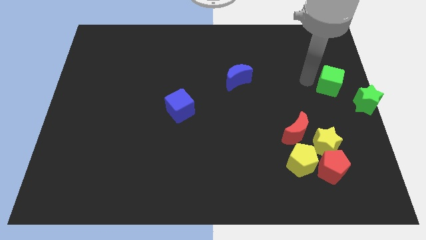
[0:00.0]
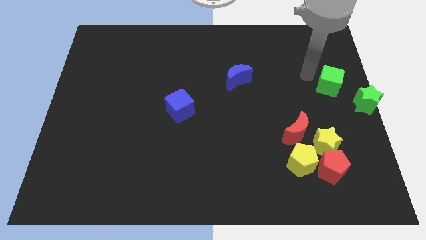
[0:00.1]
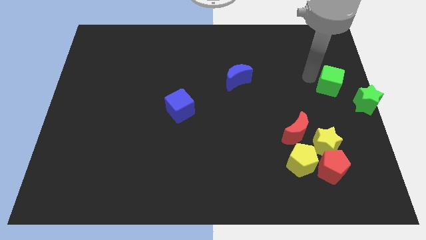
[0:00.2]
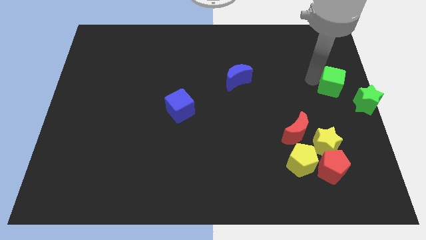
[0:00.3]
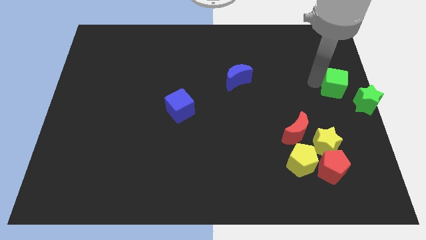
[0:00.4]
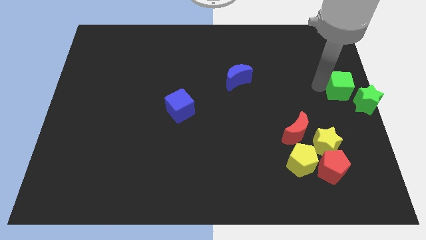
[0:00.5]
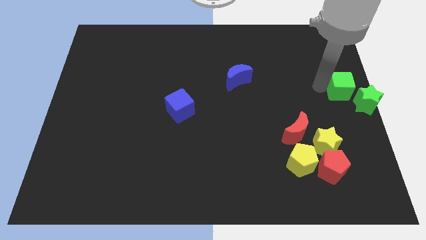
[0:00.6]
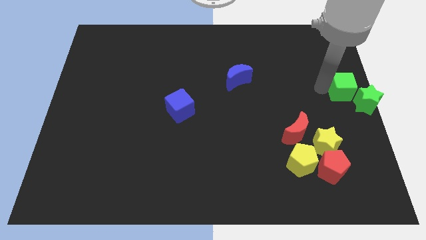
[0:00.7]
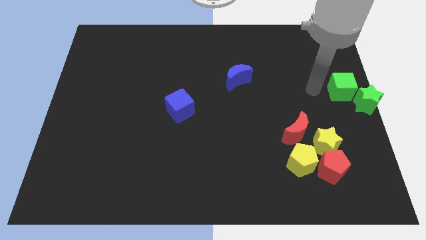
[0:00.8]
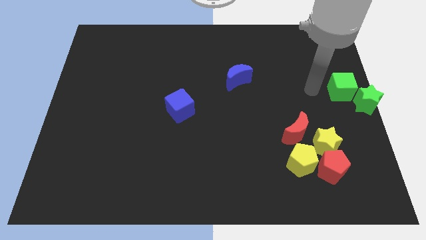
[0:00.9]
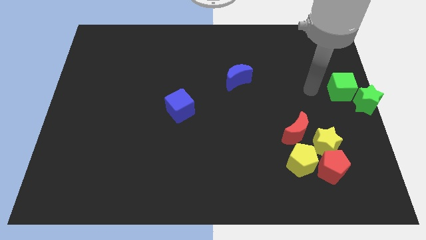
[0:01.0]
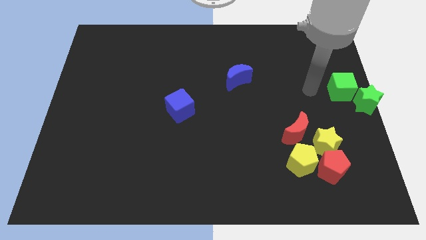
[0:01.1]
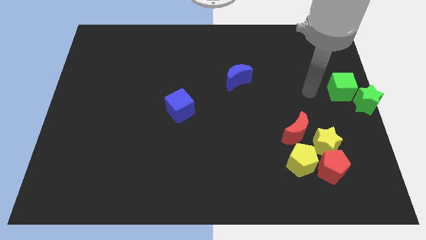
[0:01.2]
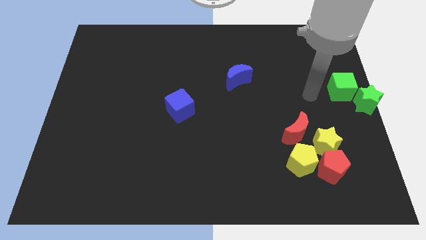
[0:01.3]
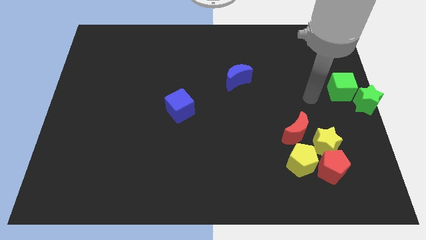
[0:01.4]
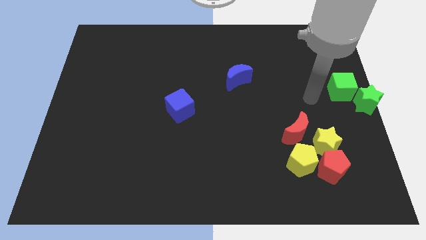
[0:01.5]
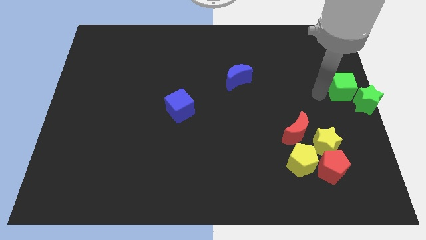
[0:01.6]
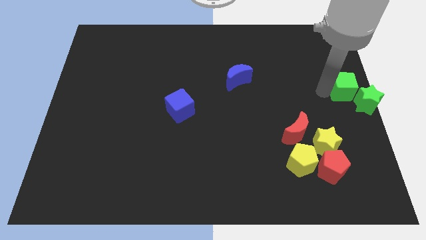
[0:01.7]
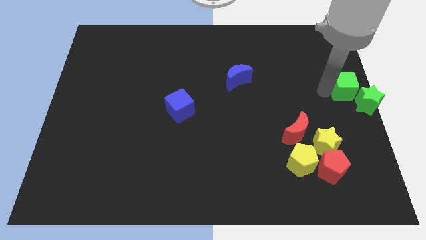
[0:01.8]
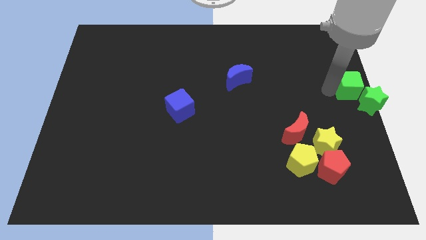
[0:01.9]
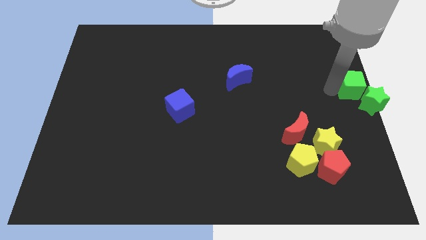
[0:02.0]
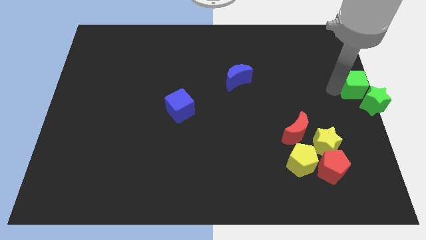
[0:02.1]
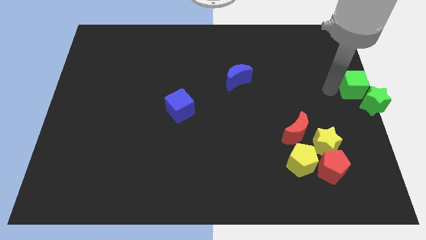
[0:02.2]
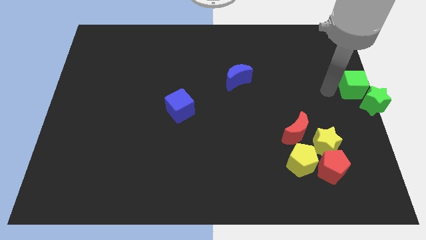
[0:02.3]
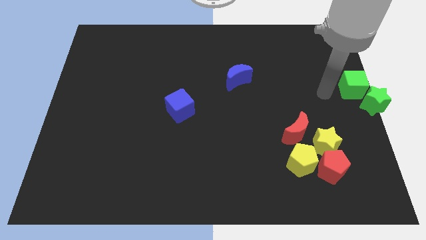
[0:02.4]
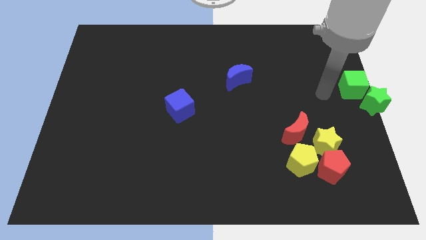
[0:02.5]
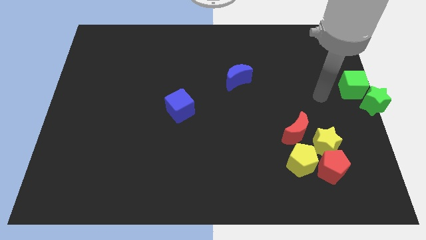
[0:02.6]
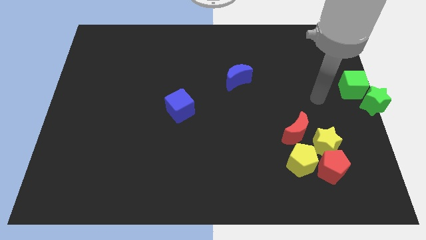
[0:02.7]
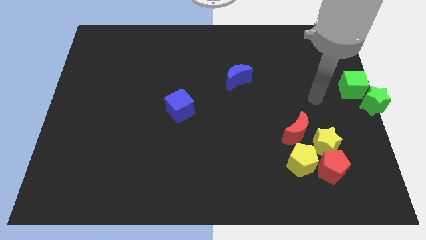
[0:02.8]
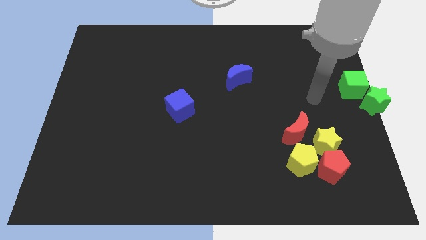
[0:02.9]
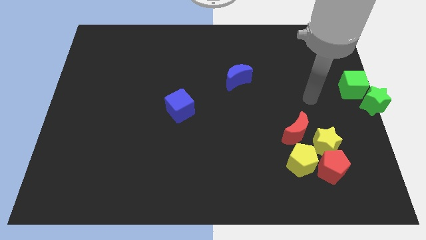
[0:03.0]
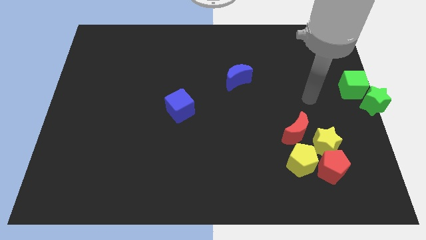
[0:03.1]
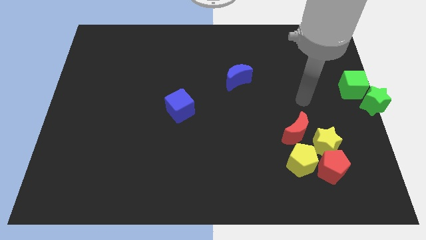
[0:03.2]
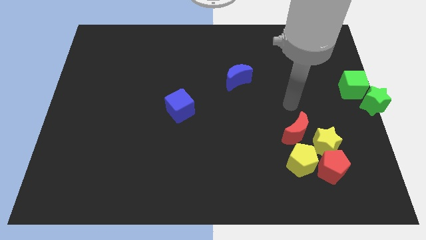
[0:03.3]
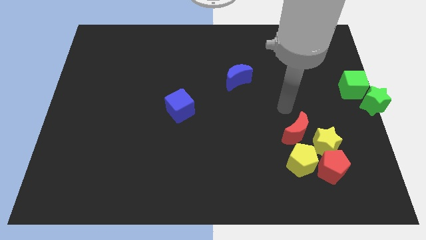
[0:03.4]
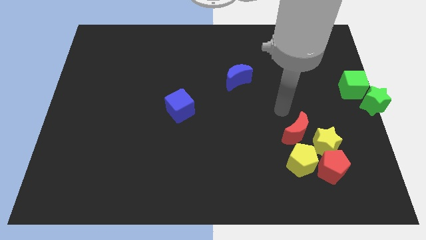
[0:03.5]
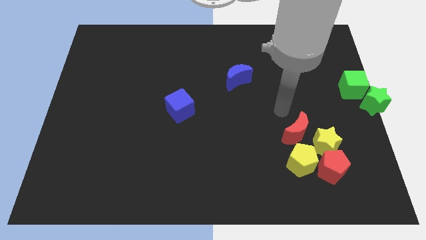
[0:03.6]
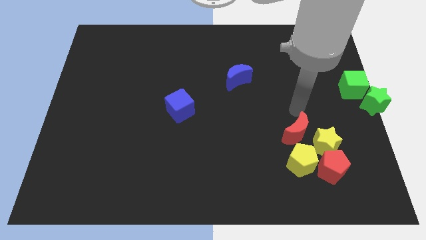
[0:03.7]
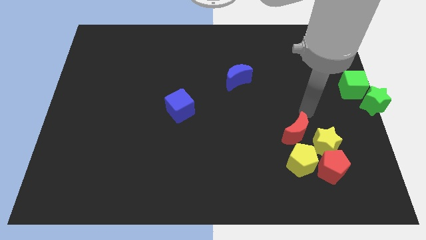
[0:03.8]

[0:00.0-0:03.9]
push green cube at center right

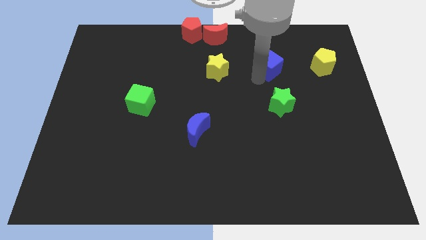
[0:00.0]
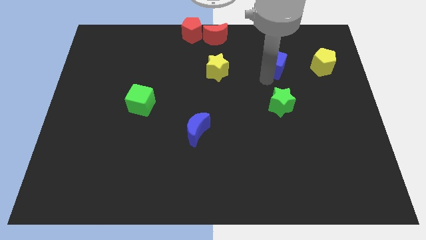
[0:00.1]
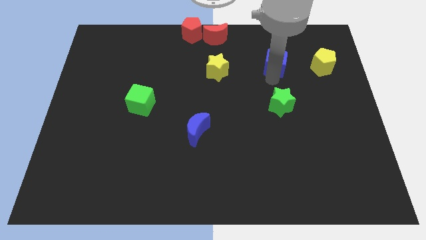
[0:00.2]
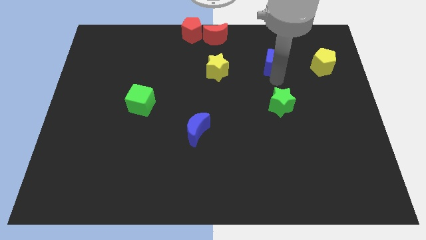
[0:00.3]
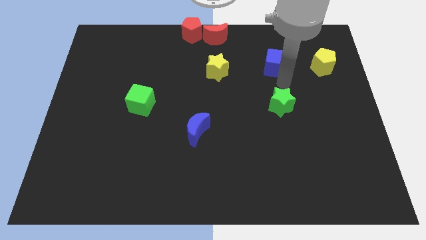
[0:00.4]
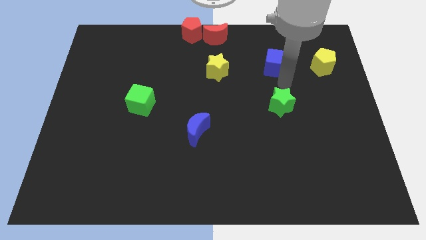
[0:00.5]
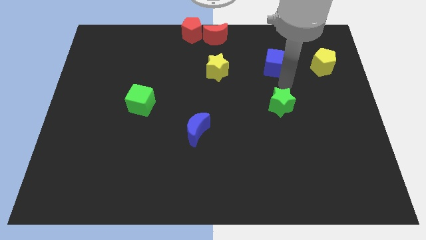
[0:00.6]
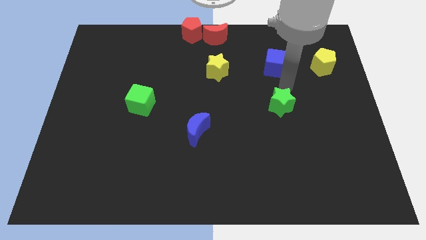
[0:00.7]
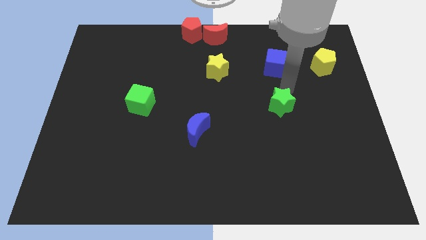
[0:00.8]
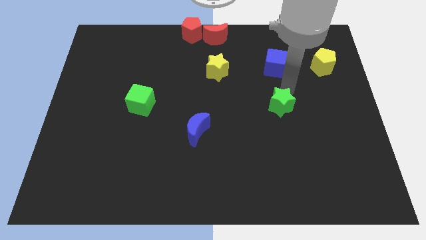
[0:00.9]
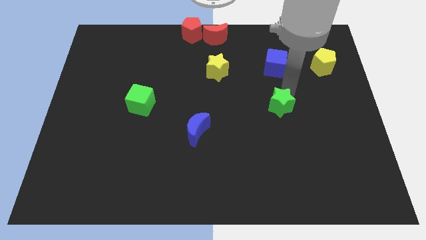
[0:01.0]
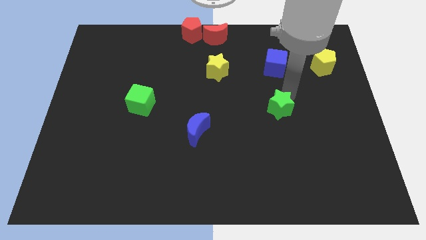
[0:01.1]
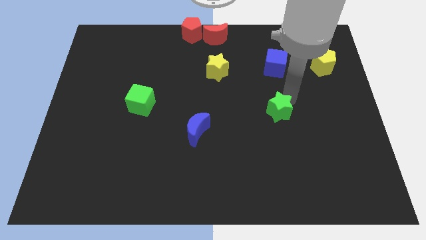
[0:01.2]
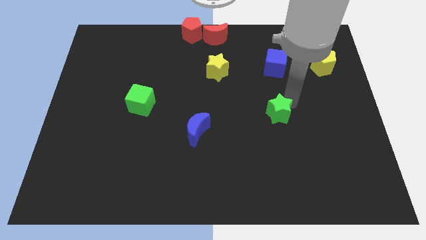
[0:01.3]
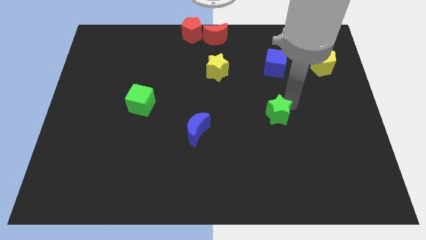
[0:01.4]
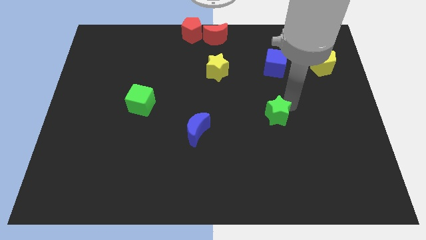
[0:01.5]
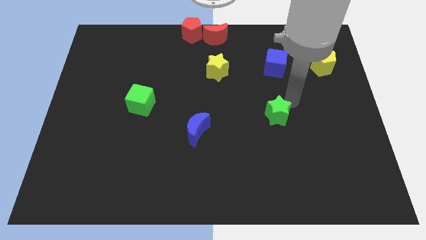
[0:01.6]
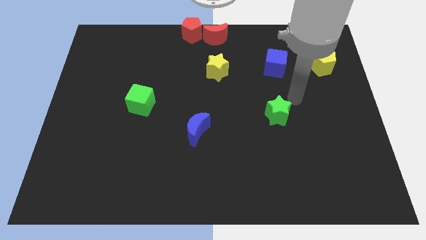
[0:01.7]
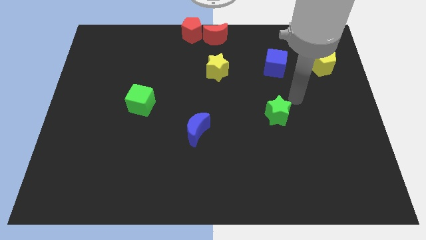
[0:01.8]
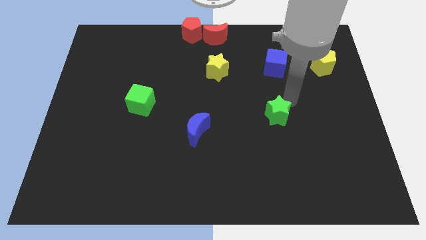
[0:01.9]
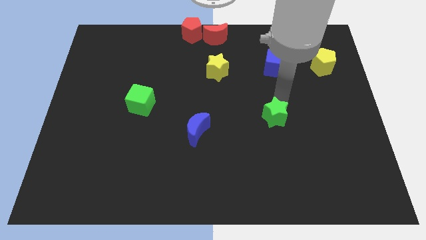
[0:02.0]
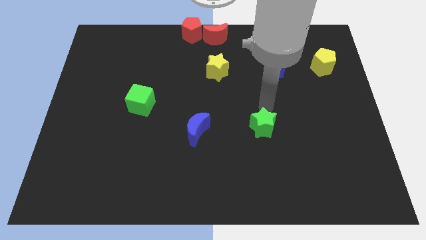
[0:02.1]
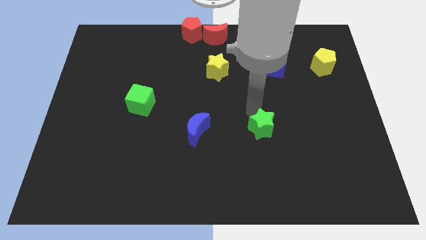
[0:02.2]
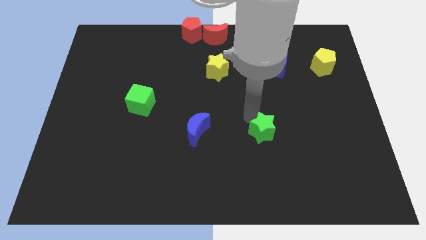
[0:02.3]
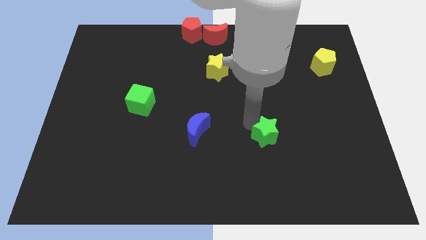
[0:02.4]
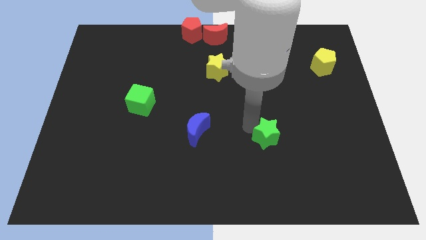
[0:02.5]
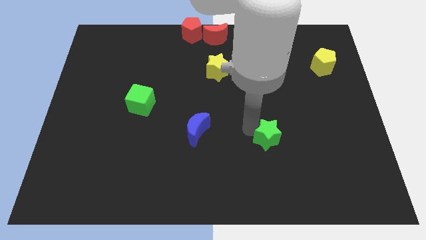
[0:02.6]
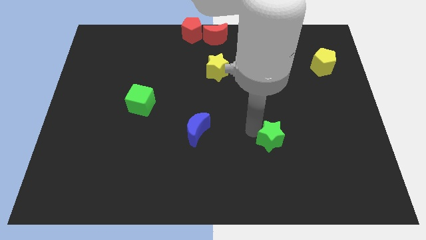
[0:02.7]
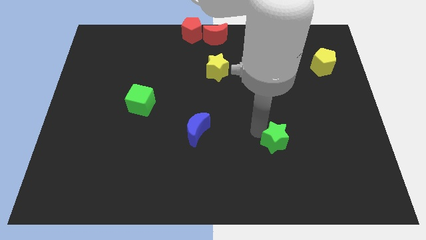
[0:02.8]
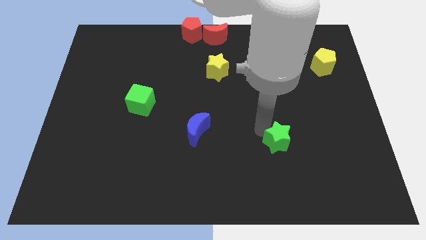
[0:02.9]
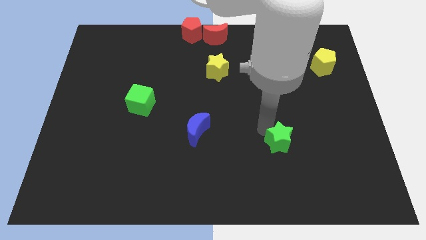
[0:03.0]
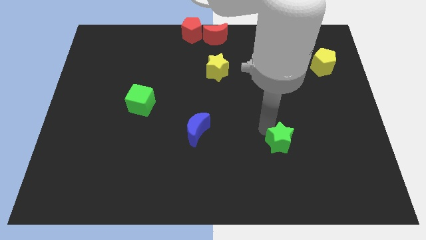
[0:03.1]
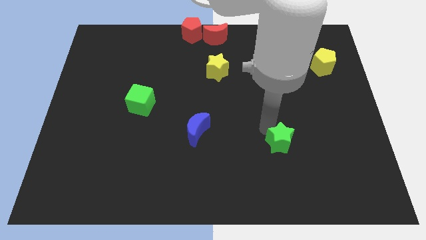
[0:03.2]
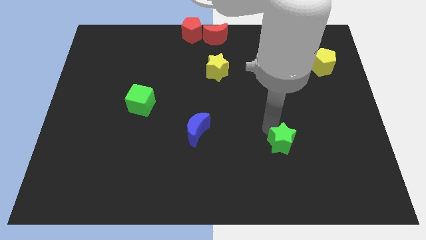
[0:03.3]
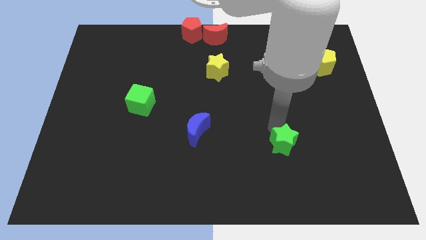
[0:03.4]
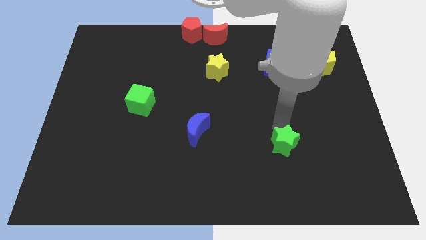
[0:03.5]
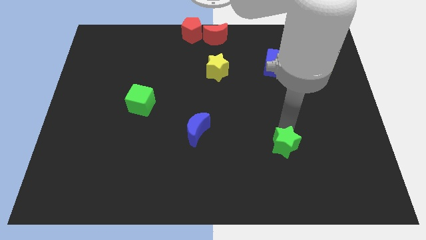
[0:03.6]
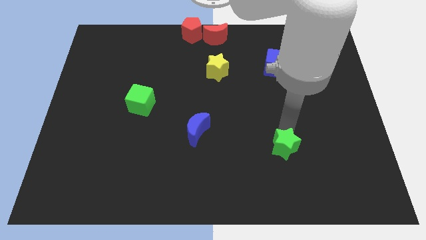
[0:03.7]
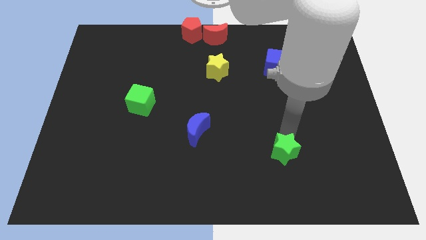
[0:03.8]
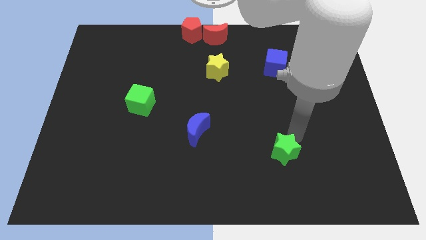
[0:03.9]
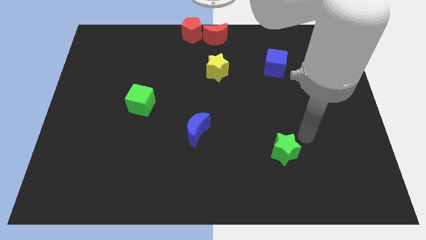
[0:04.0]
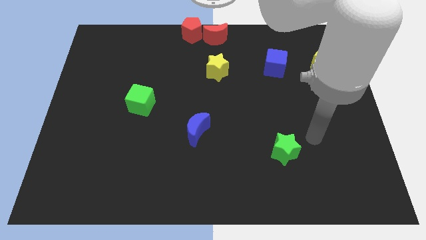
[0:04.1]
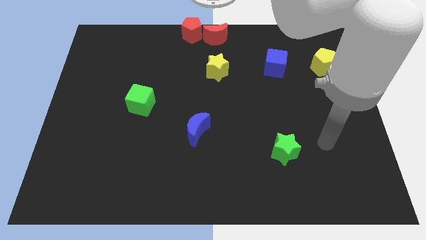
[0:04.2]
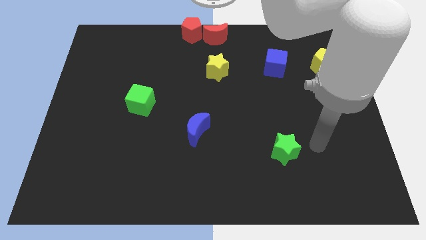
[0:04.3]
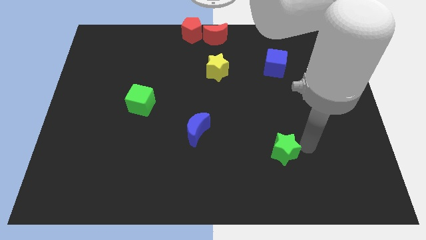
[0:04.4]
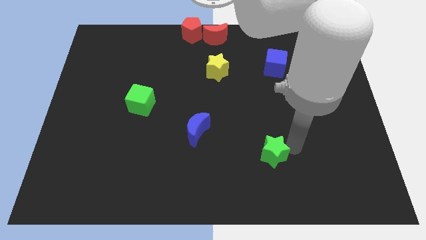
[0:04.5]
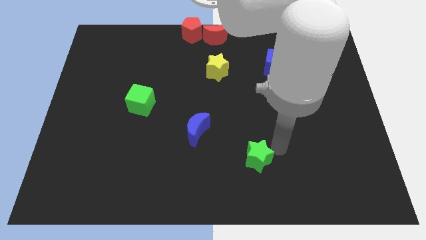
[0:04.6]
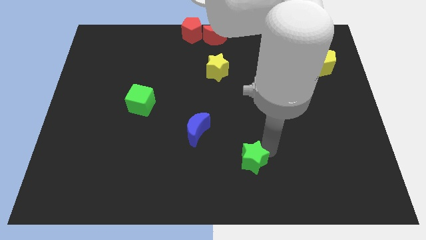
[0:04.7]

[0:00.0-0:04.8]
move the green star slightly down

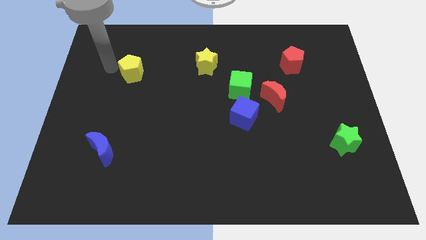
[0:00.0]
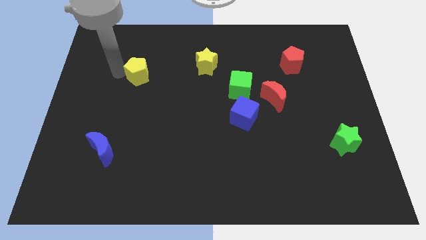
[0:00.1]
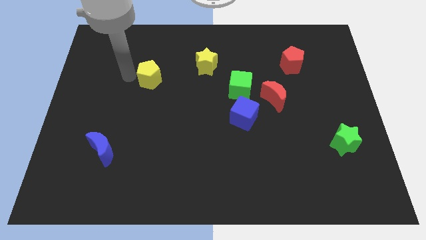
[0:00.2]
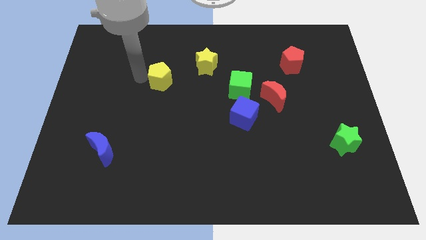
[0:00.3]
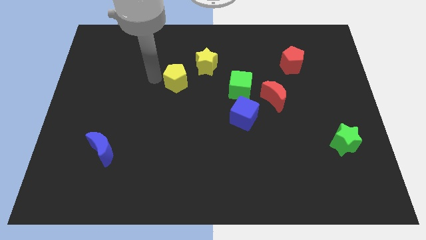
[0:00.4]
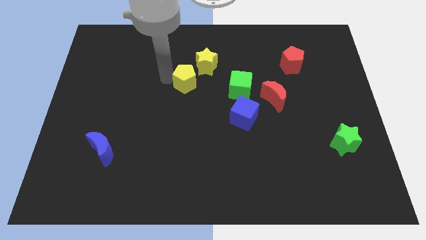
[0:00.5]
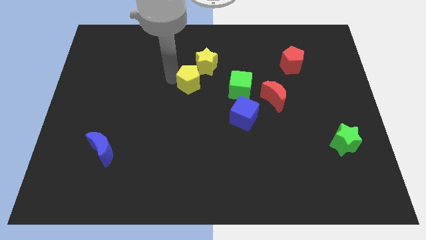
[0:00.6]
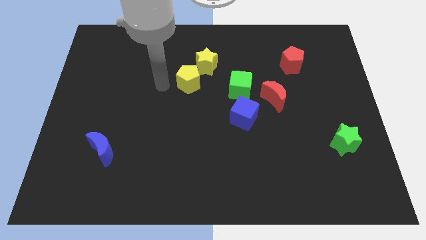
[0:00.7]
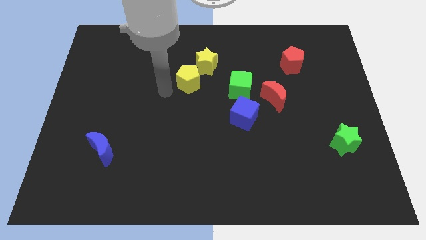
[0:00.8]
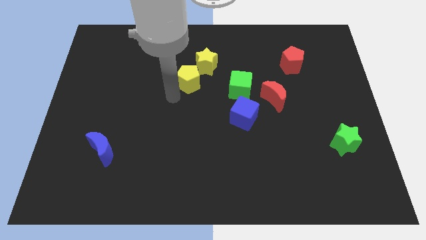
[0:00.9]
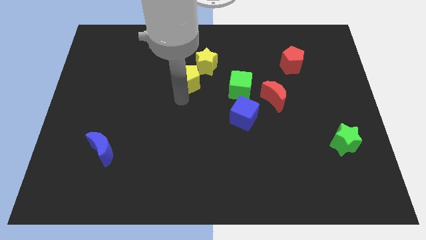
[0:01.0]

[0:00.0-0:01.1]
slide the yellow pentagon to the bottom left side of the yellow star
